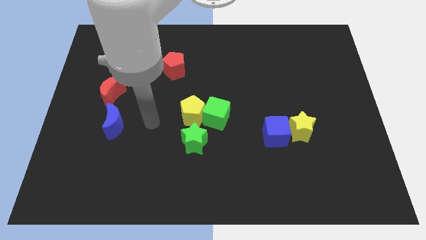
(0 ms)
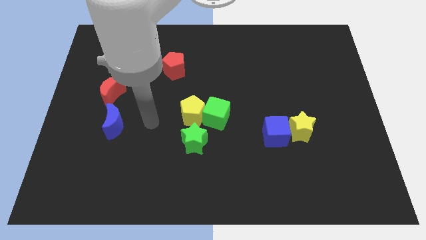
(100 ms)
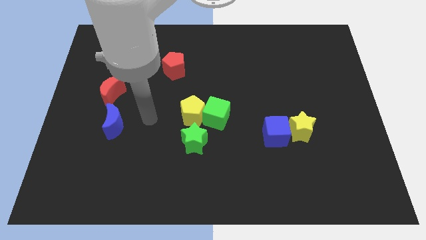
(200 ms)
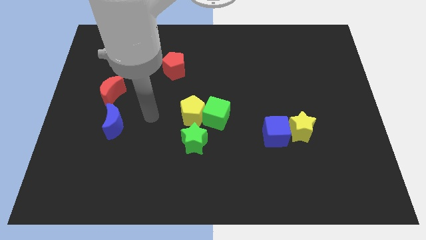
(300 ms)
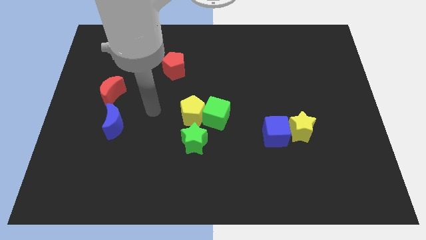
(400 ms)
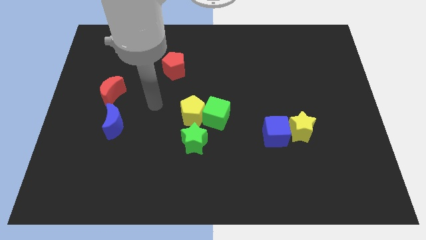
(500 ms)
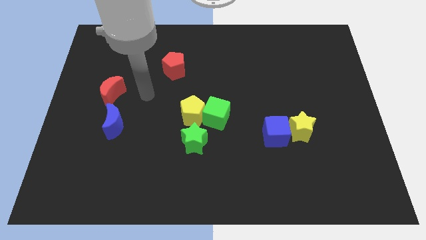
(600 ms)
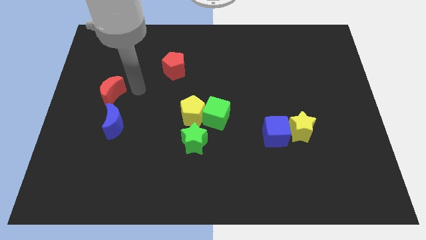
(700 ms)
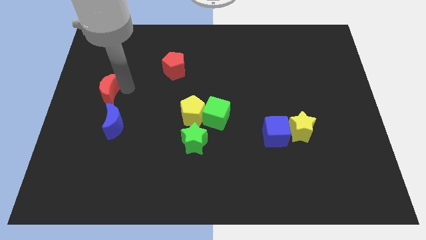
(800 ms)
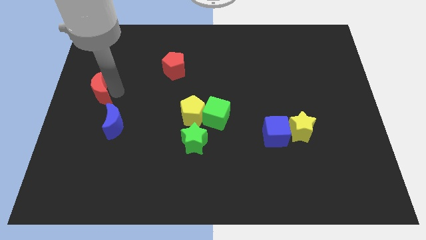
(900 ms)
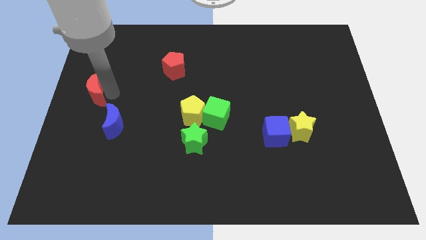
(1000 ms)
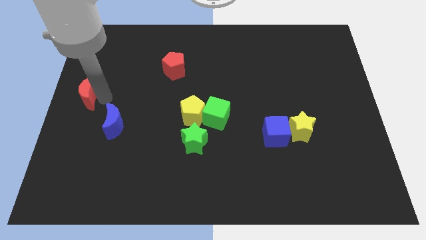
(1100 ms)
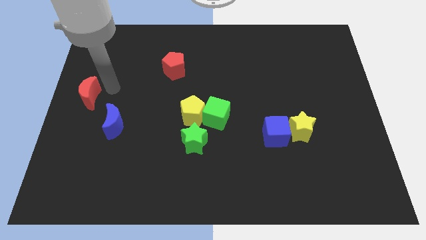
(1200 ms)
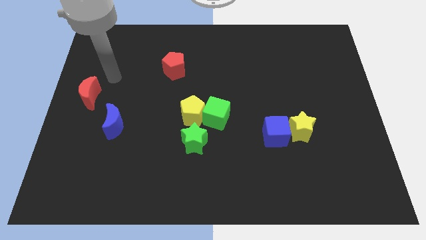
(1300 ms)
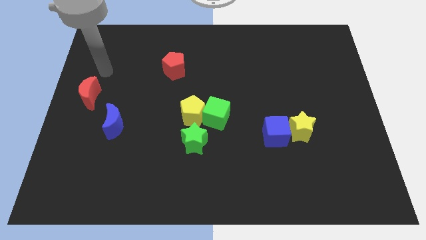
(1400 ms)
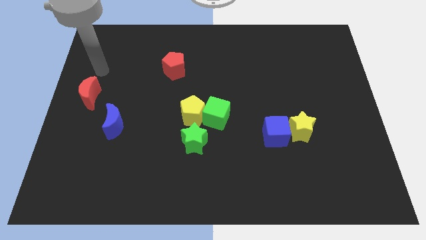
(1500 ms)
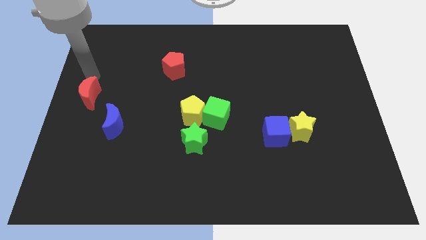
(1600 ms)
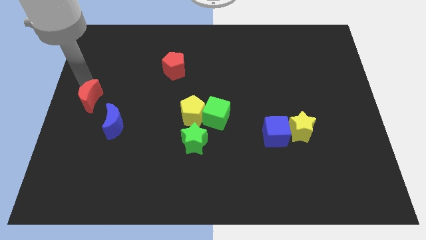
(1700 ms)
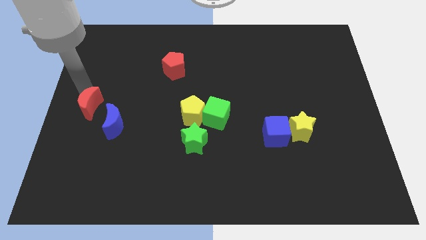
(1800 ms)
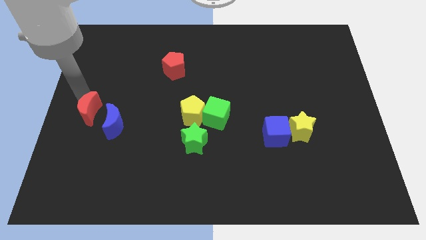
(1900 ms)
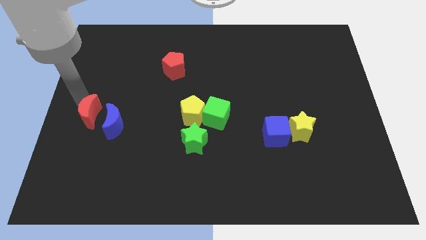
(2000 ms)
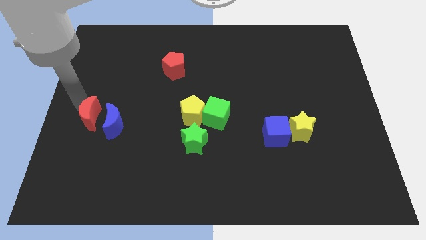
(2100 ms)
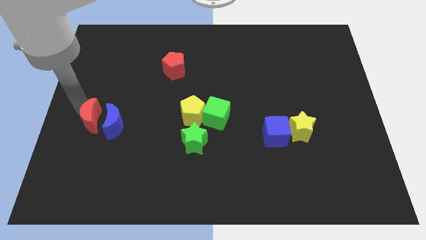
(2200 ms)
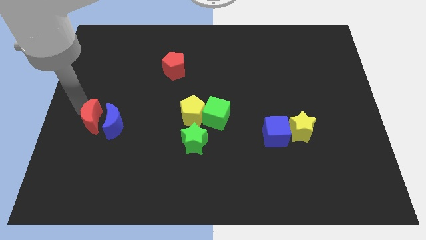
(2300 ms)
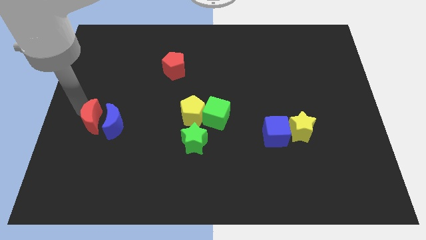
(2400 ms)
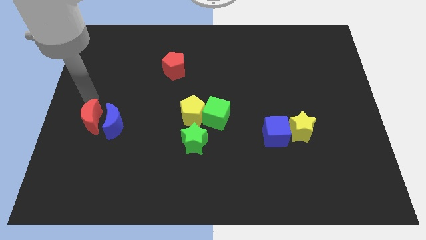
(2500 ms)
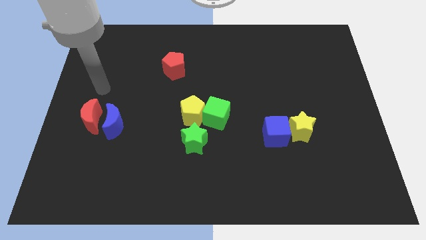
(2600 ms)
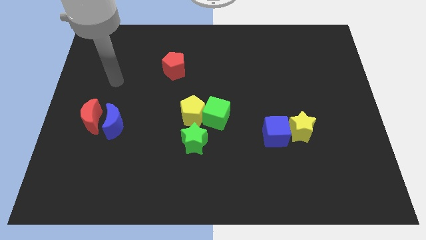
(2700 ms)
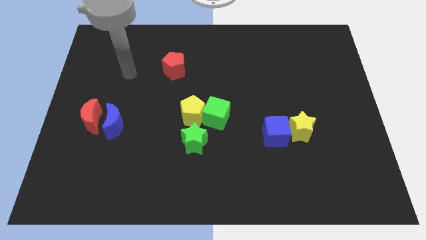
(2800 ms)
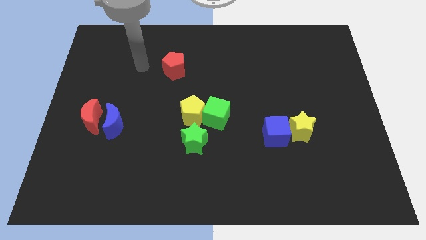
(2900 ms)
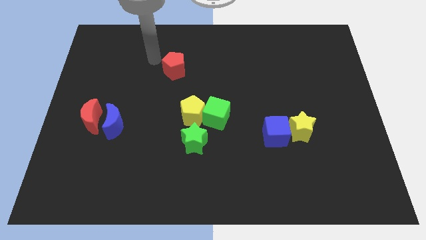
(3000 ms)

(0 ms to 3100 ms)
move red crescent left to the blue crescent

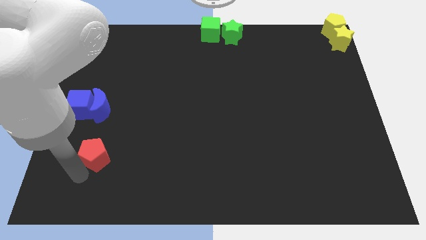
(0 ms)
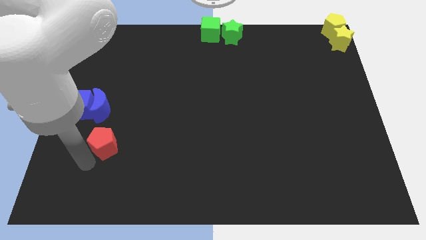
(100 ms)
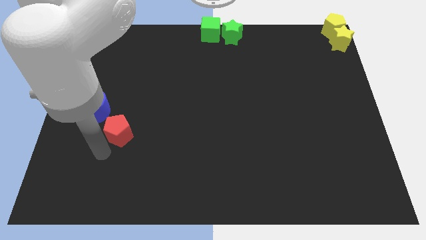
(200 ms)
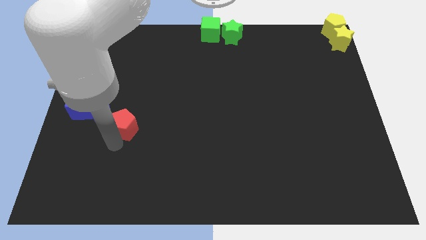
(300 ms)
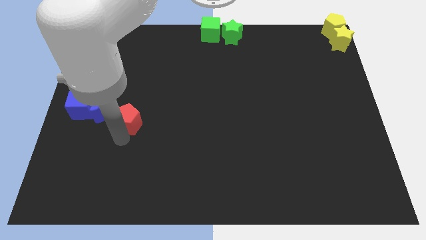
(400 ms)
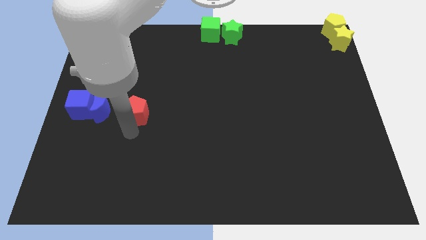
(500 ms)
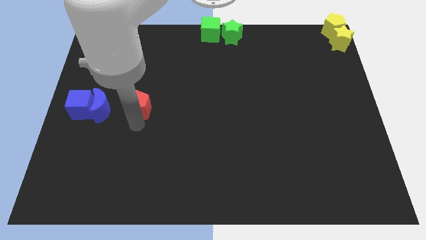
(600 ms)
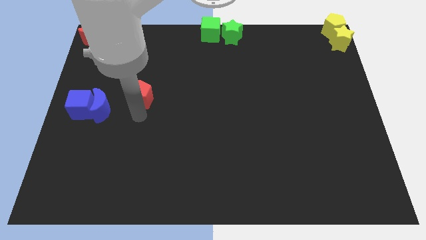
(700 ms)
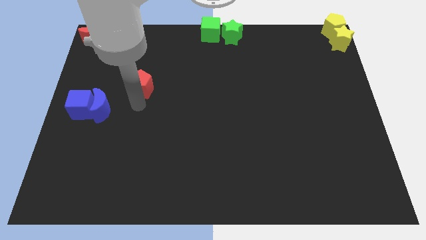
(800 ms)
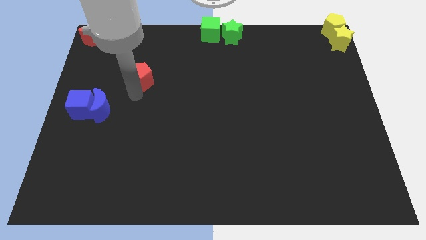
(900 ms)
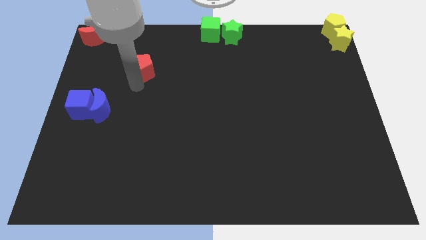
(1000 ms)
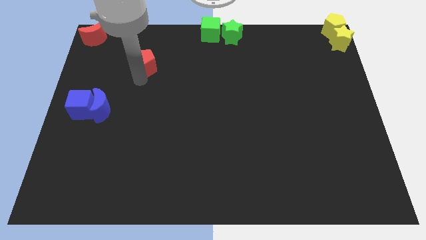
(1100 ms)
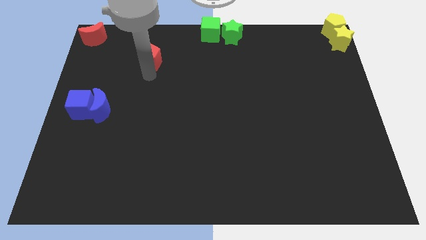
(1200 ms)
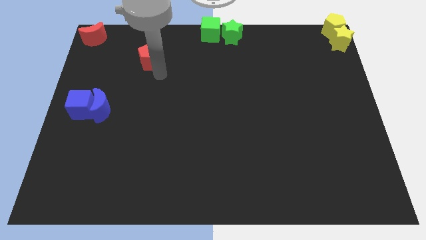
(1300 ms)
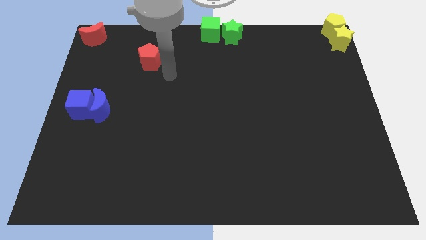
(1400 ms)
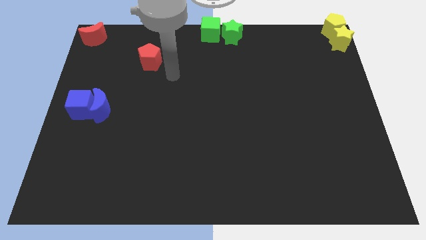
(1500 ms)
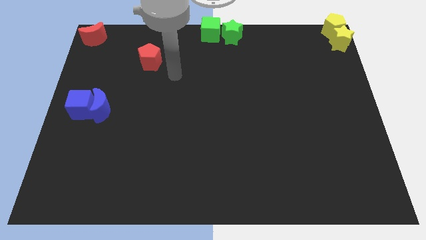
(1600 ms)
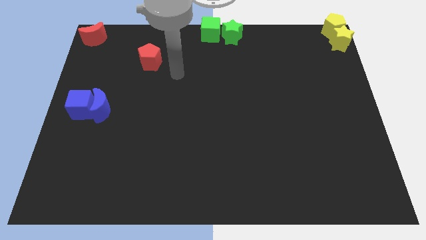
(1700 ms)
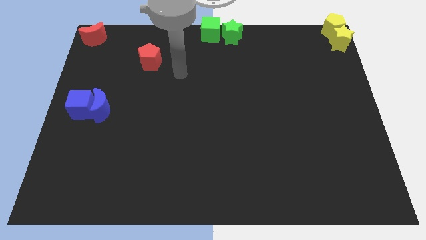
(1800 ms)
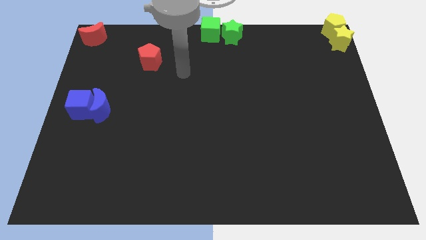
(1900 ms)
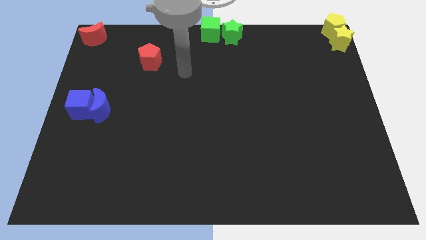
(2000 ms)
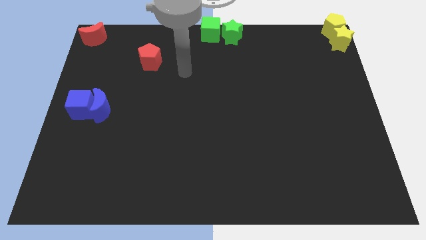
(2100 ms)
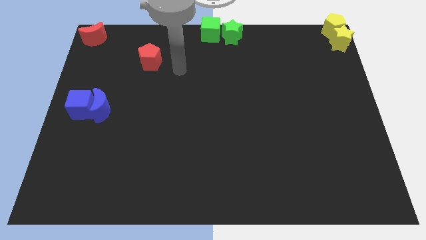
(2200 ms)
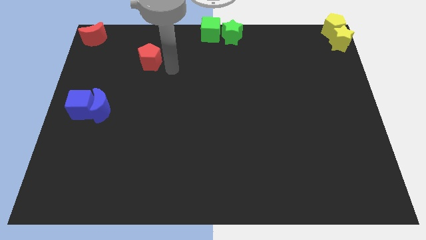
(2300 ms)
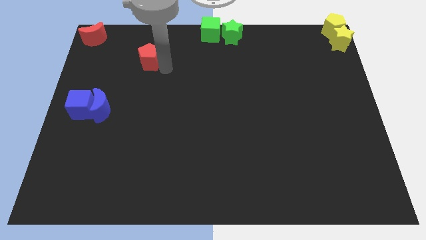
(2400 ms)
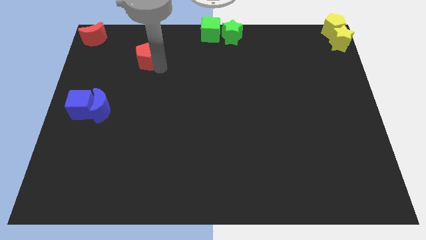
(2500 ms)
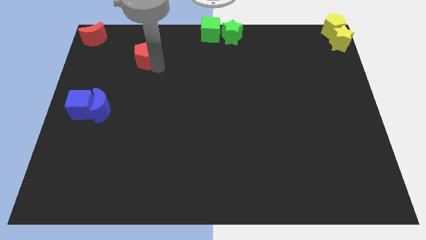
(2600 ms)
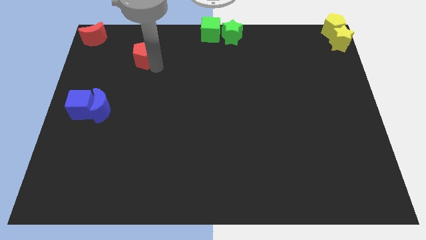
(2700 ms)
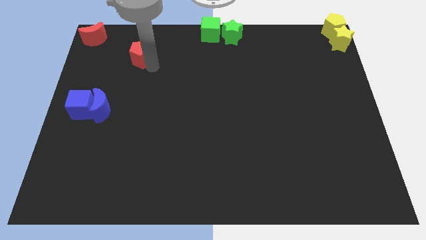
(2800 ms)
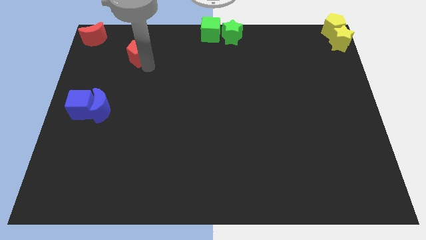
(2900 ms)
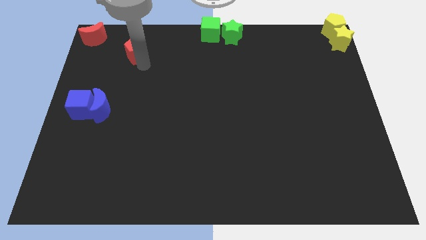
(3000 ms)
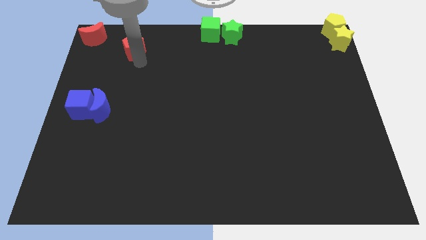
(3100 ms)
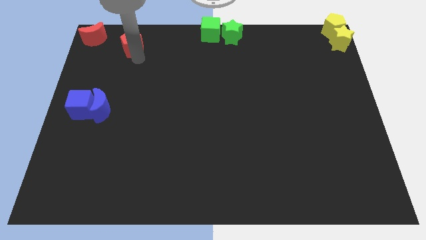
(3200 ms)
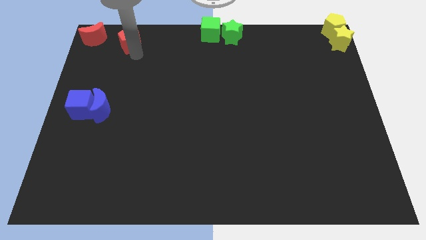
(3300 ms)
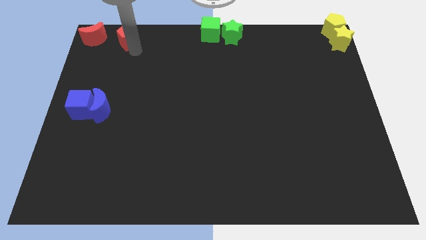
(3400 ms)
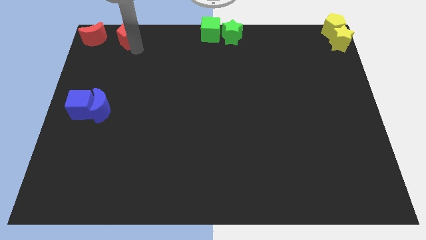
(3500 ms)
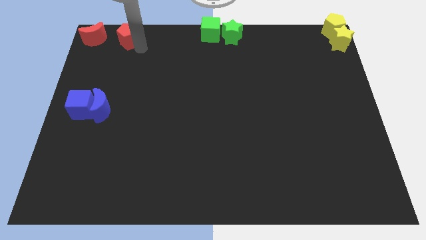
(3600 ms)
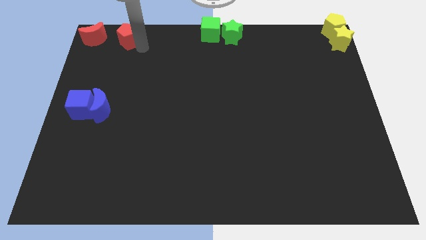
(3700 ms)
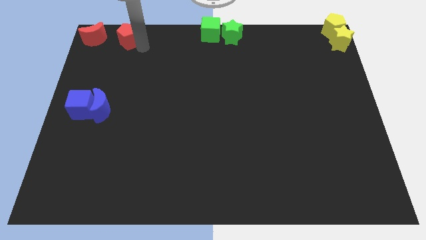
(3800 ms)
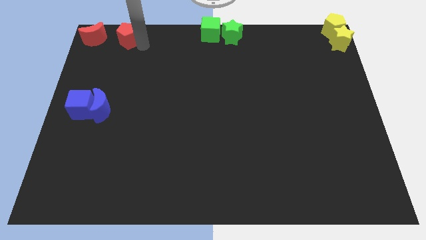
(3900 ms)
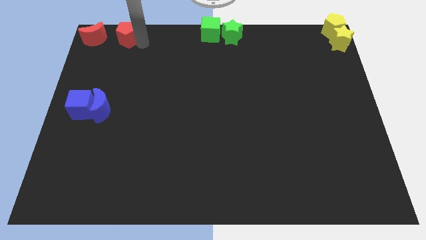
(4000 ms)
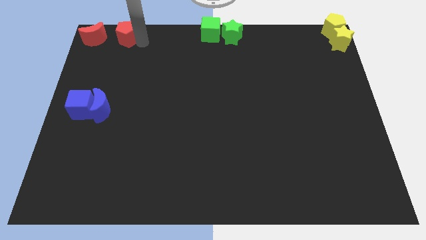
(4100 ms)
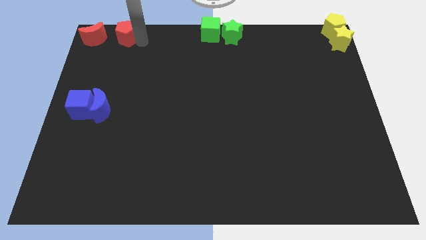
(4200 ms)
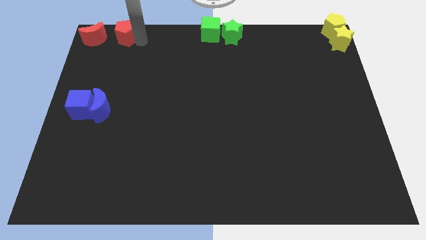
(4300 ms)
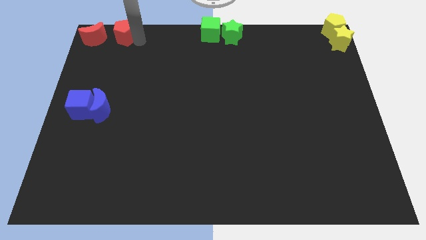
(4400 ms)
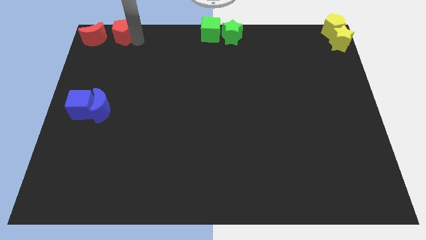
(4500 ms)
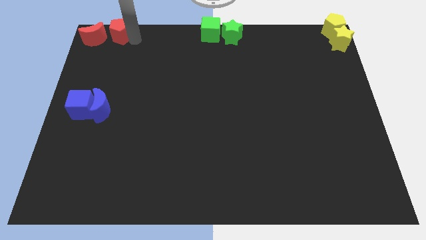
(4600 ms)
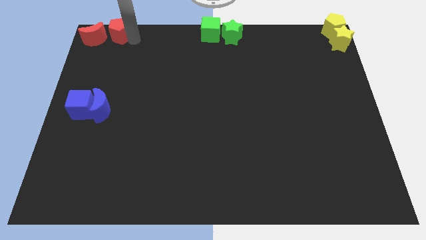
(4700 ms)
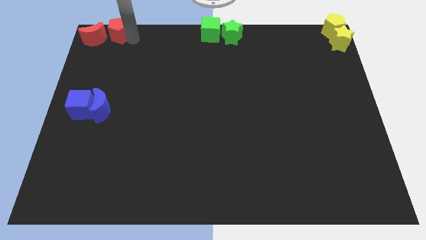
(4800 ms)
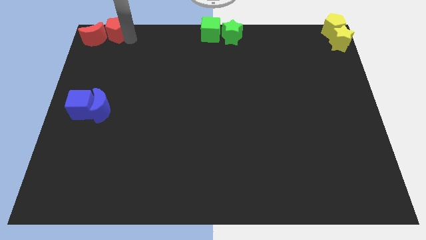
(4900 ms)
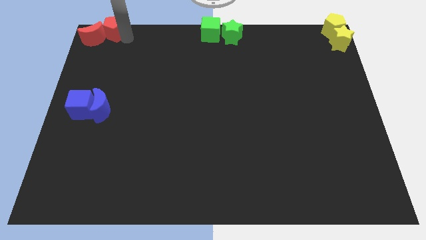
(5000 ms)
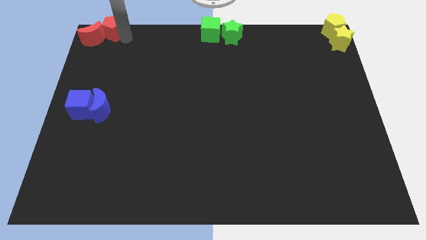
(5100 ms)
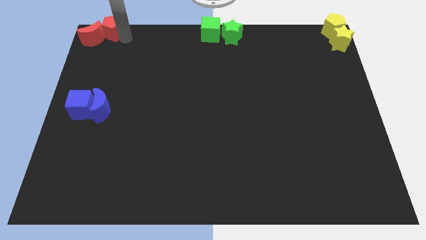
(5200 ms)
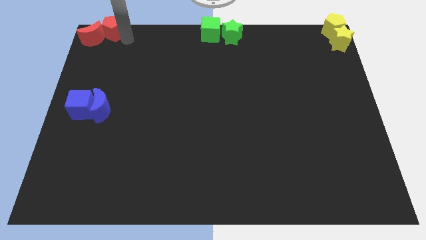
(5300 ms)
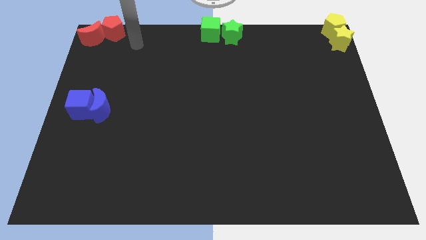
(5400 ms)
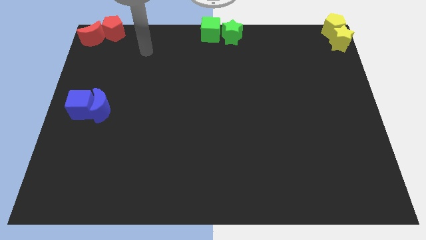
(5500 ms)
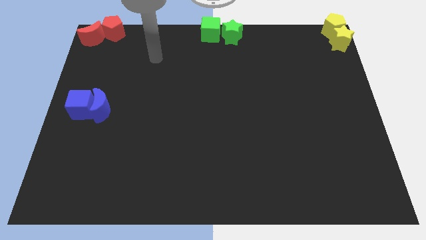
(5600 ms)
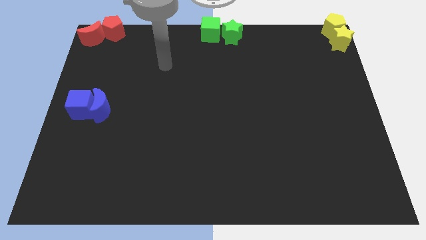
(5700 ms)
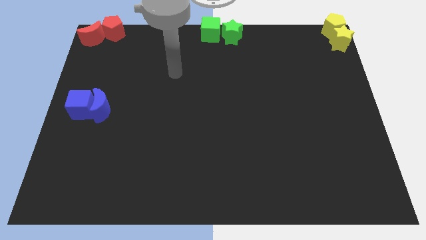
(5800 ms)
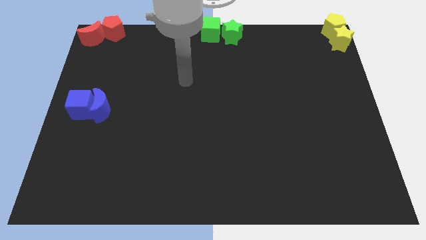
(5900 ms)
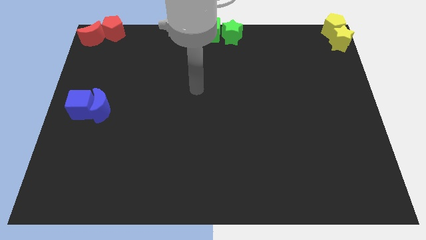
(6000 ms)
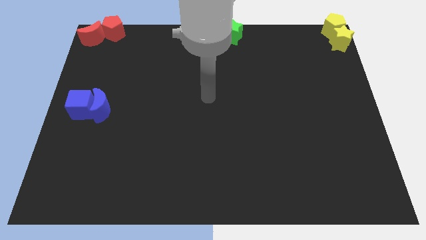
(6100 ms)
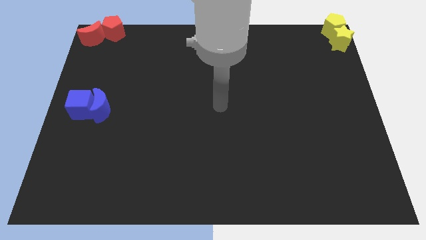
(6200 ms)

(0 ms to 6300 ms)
put the red pentagon on the right side of the red crescent
